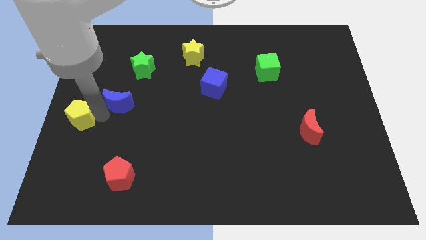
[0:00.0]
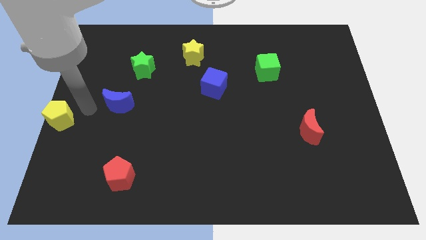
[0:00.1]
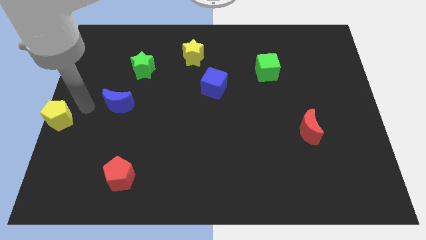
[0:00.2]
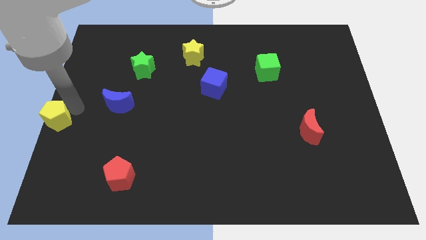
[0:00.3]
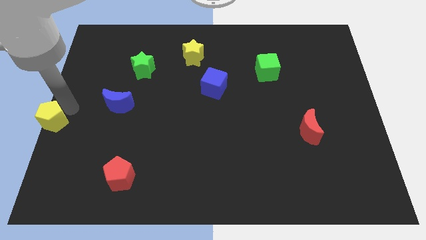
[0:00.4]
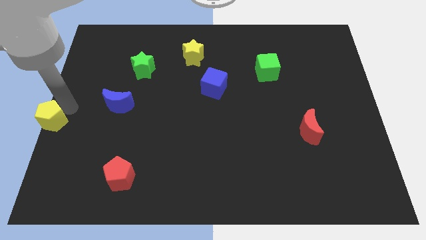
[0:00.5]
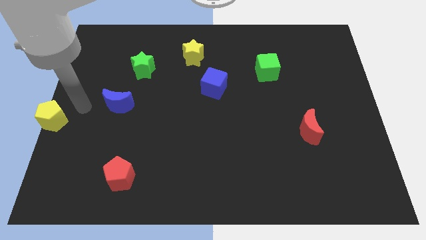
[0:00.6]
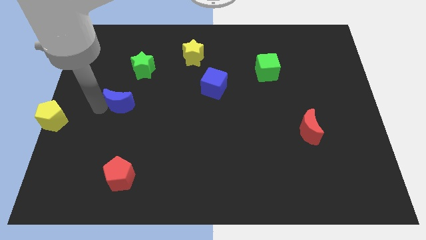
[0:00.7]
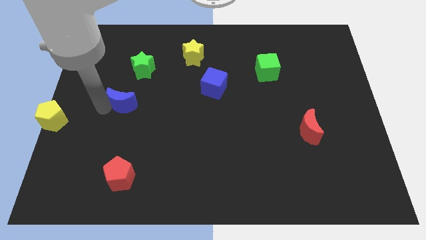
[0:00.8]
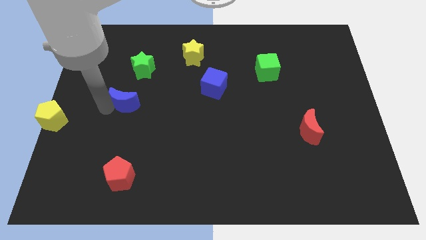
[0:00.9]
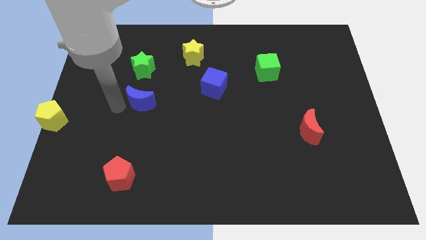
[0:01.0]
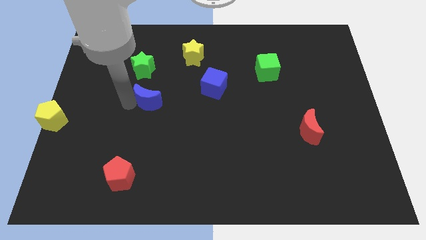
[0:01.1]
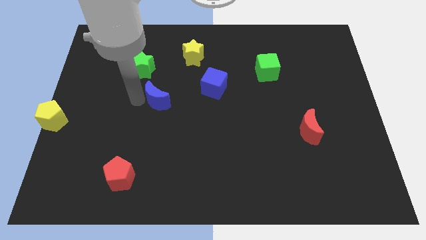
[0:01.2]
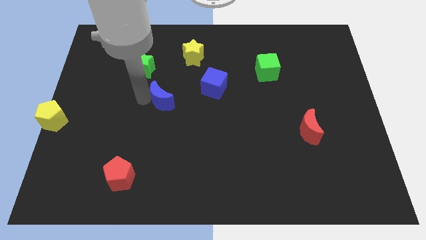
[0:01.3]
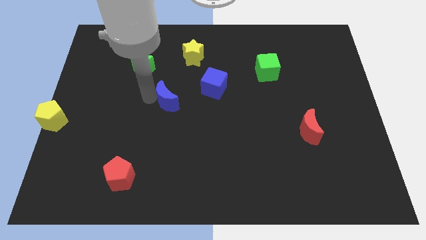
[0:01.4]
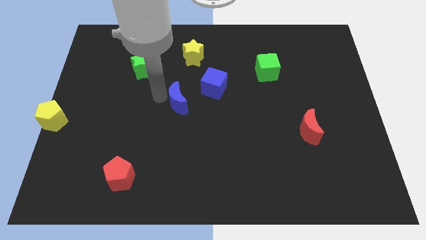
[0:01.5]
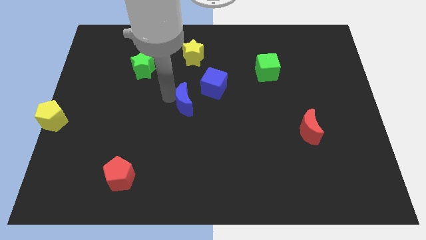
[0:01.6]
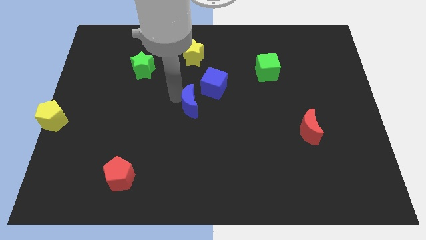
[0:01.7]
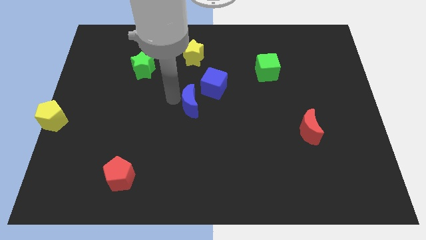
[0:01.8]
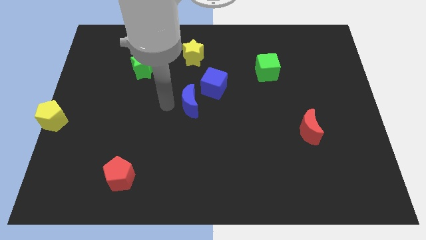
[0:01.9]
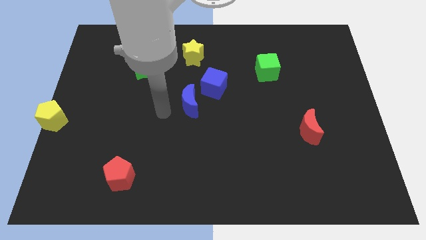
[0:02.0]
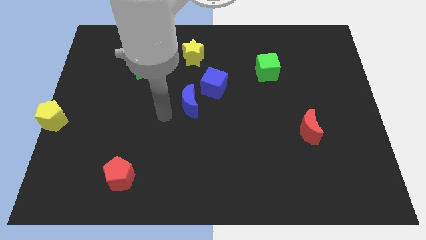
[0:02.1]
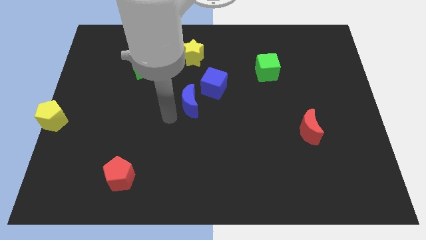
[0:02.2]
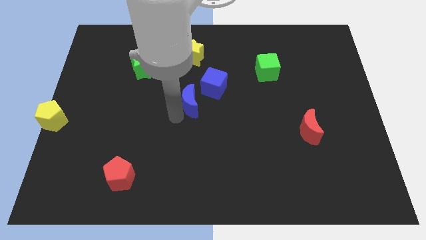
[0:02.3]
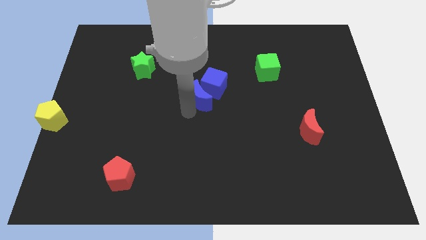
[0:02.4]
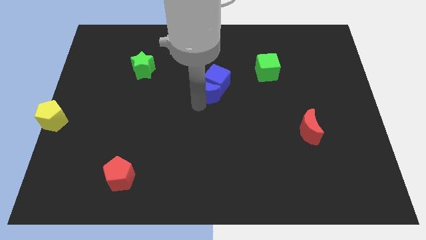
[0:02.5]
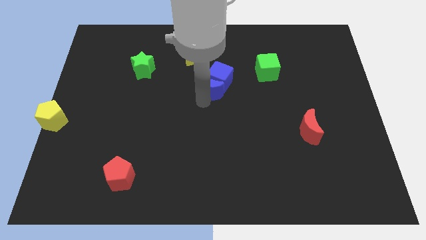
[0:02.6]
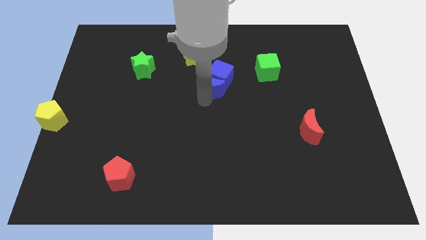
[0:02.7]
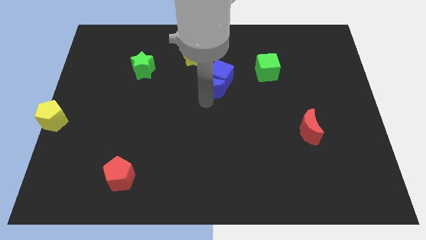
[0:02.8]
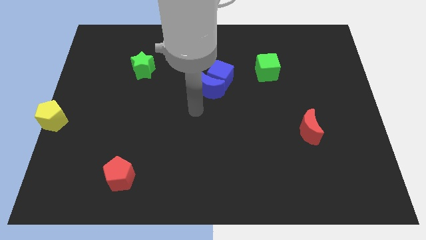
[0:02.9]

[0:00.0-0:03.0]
push blue moon towards blue cube

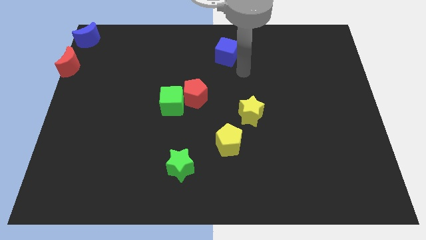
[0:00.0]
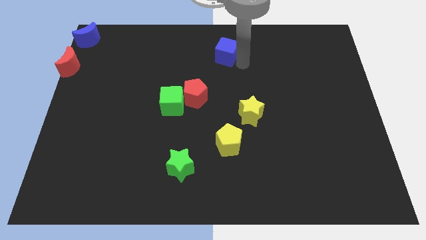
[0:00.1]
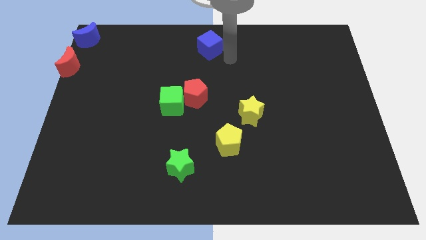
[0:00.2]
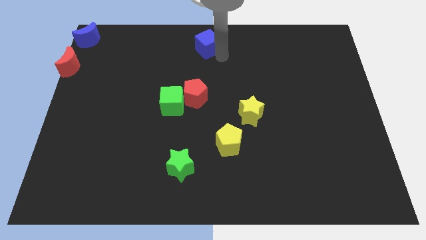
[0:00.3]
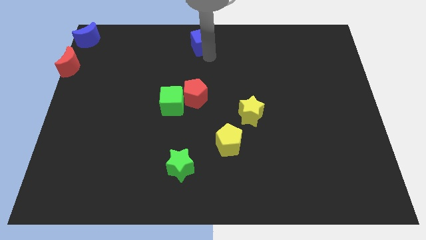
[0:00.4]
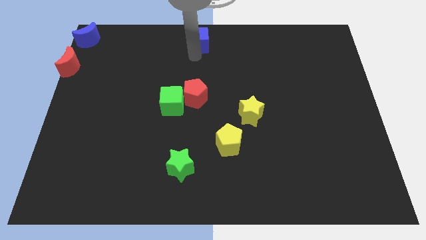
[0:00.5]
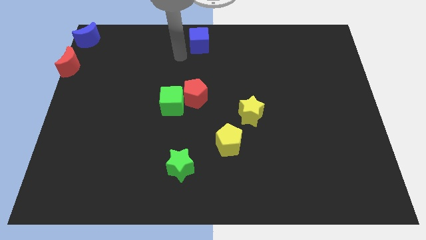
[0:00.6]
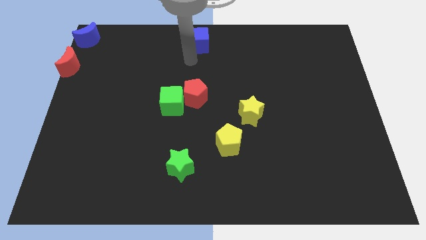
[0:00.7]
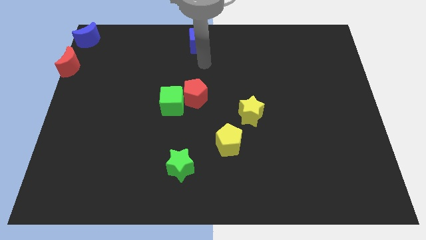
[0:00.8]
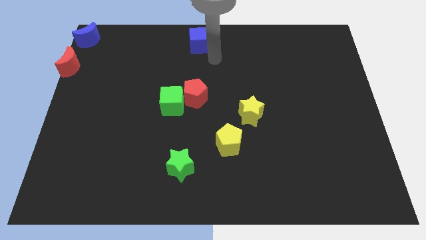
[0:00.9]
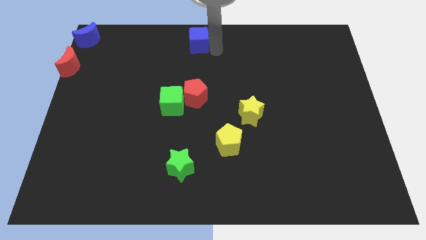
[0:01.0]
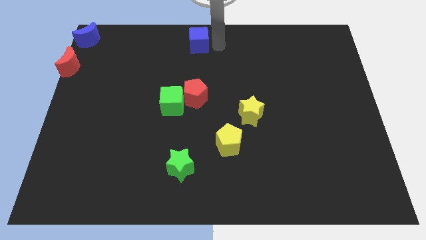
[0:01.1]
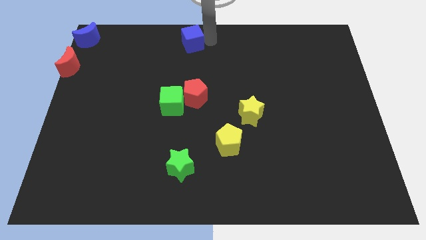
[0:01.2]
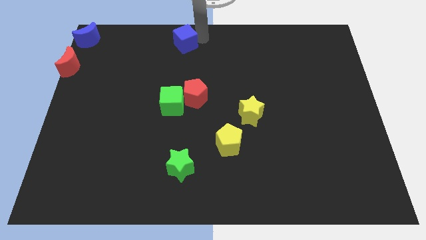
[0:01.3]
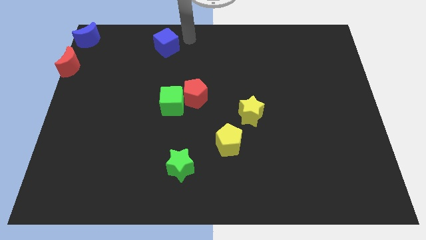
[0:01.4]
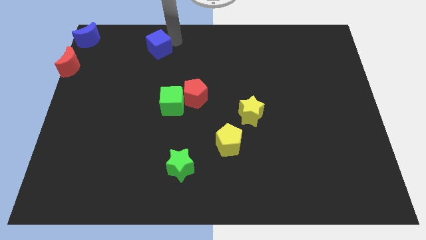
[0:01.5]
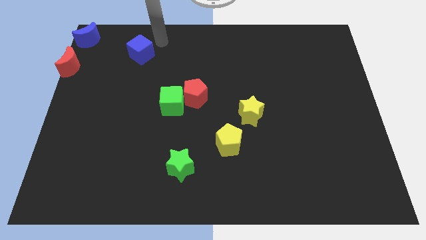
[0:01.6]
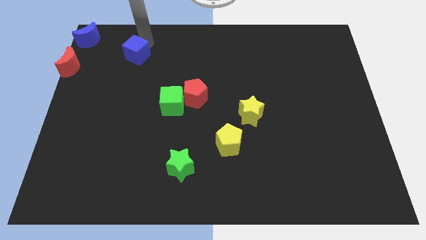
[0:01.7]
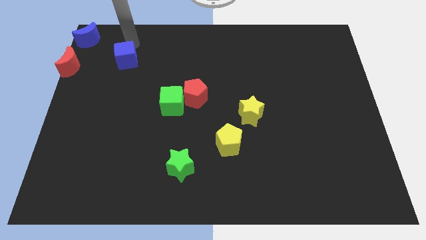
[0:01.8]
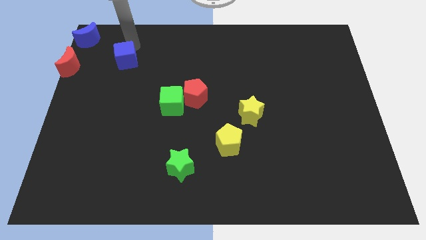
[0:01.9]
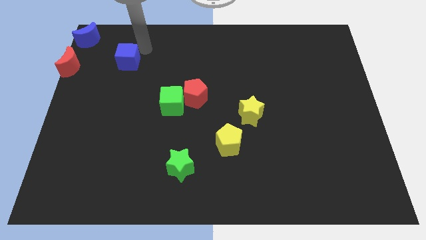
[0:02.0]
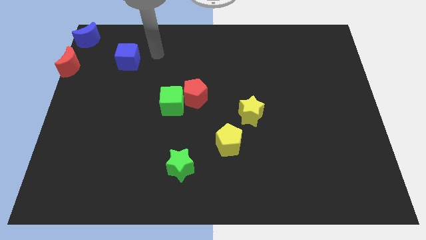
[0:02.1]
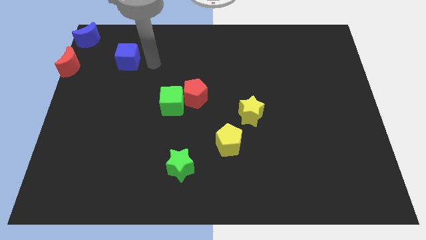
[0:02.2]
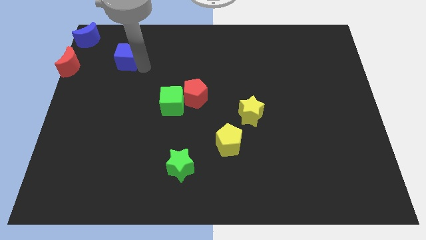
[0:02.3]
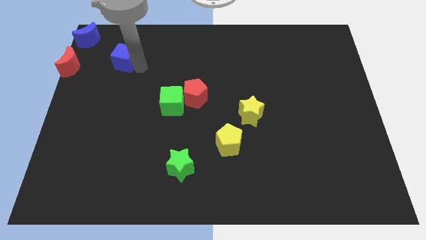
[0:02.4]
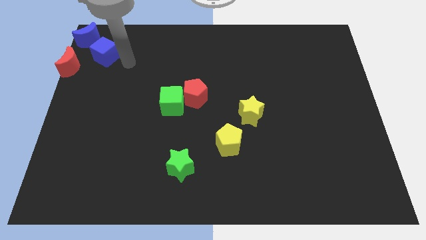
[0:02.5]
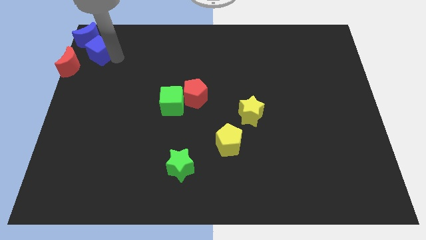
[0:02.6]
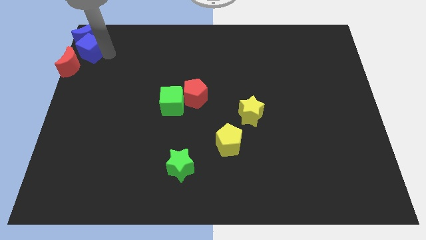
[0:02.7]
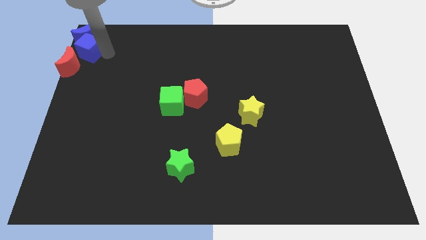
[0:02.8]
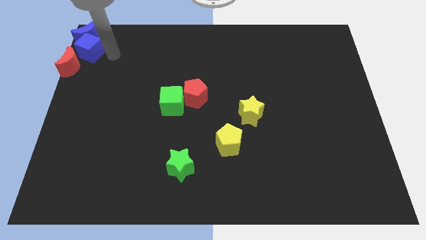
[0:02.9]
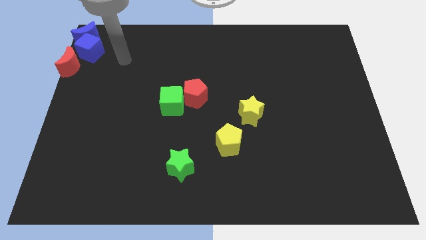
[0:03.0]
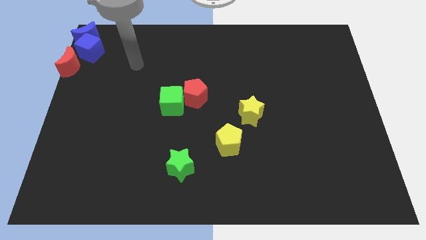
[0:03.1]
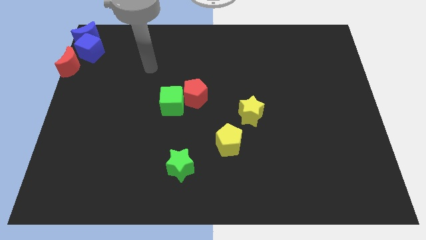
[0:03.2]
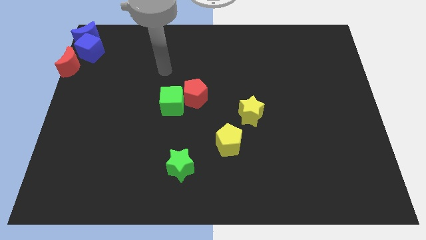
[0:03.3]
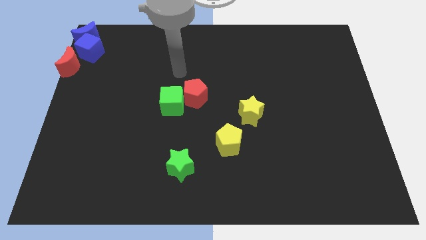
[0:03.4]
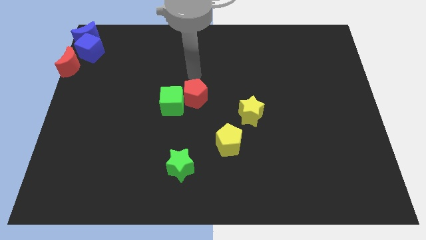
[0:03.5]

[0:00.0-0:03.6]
push the blue cube into the blue moon

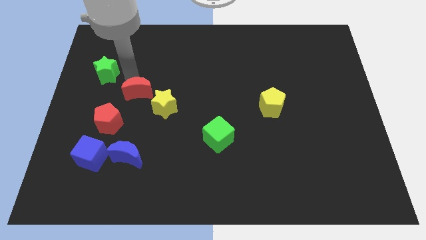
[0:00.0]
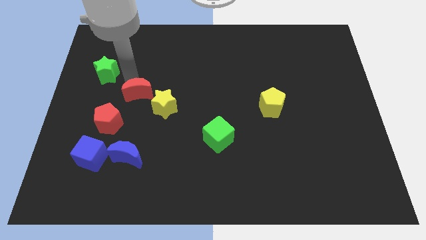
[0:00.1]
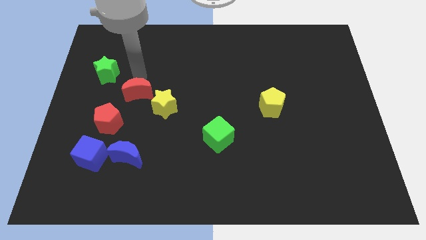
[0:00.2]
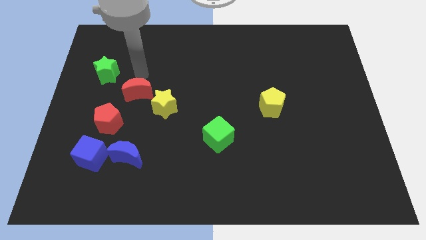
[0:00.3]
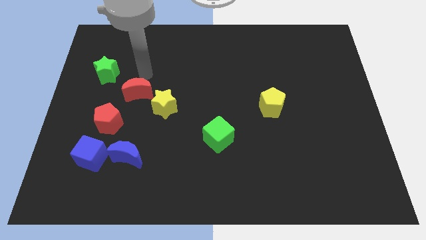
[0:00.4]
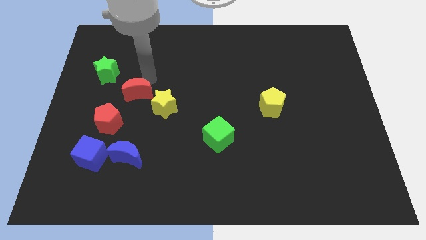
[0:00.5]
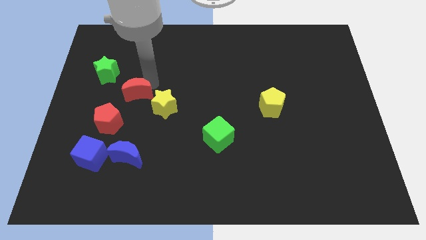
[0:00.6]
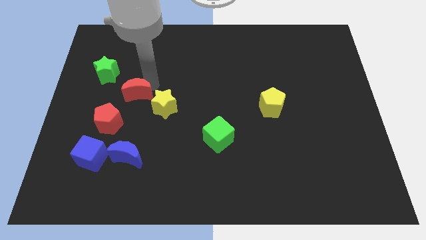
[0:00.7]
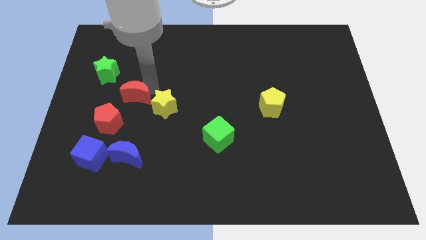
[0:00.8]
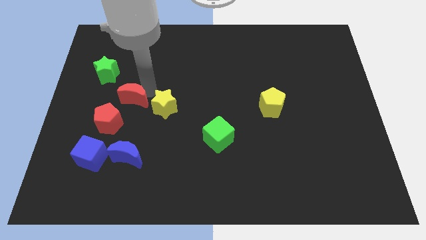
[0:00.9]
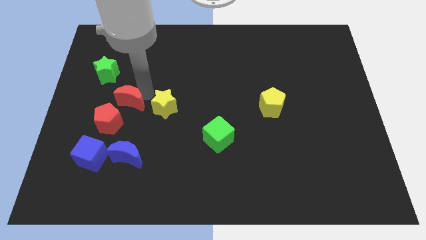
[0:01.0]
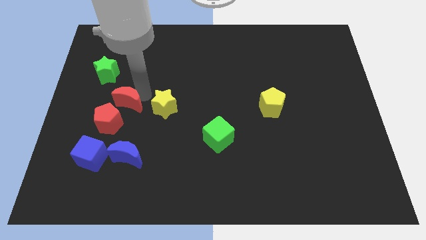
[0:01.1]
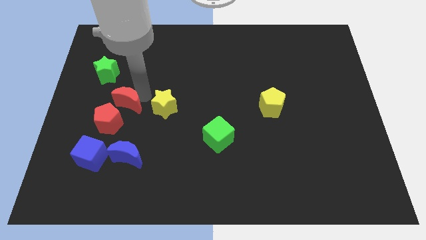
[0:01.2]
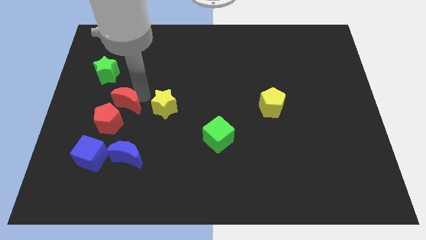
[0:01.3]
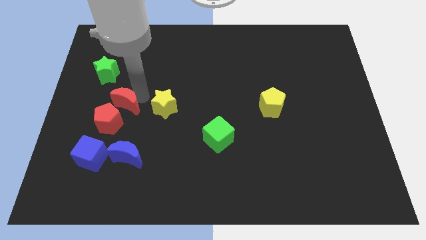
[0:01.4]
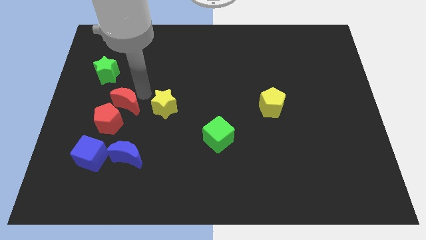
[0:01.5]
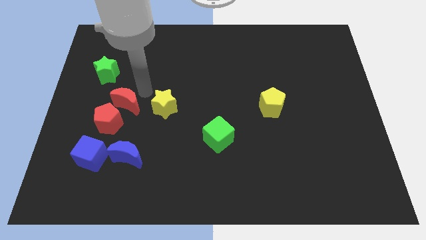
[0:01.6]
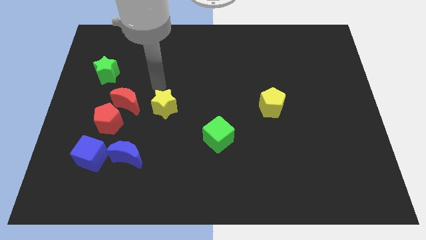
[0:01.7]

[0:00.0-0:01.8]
move the red crescent close to the red pentagon

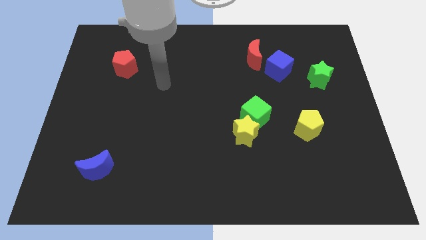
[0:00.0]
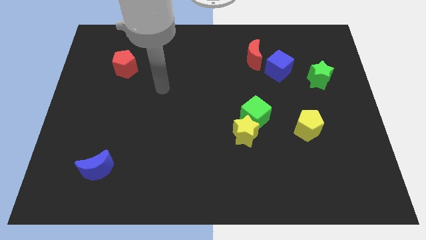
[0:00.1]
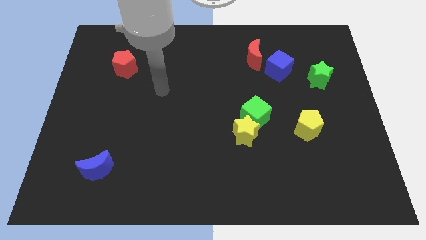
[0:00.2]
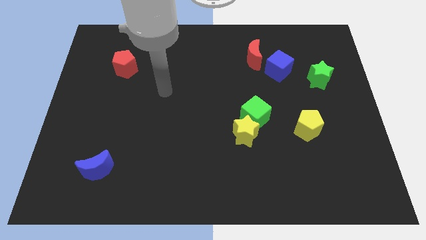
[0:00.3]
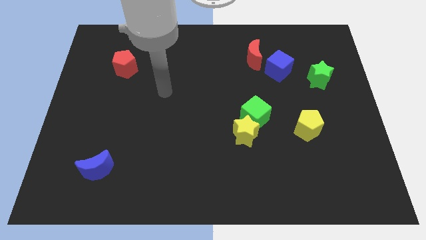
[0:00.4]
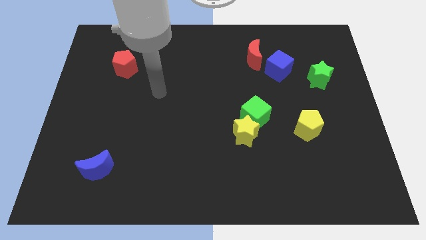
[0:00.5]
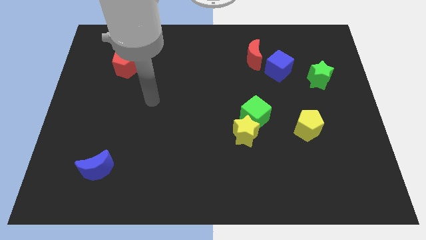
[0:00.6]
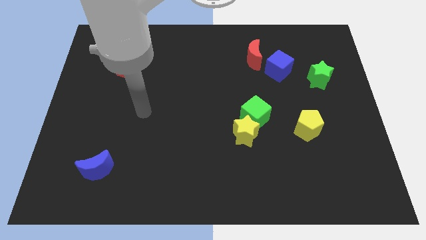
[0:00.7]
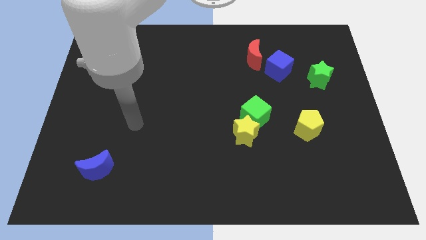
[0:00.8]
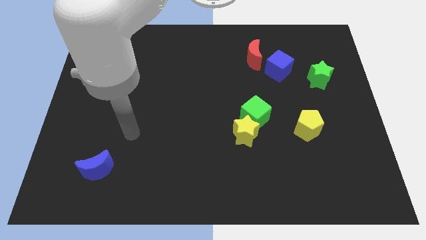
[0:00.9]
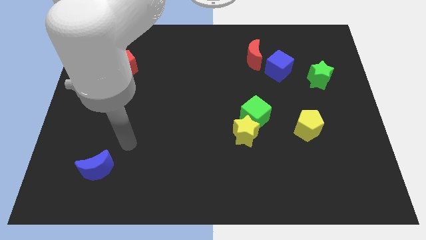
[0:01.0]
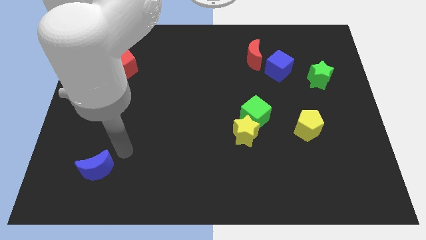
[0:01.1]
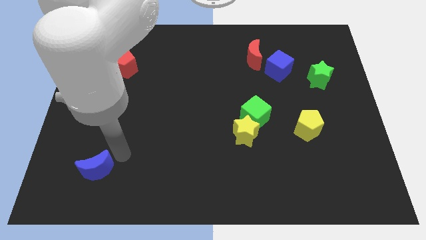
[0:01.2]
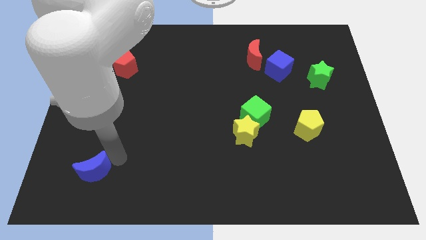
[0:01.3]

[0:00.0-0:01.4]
place the arm diagonally to the blue moon
